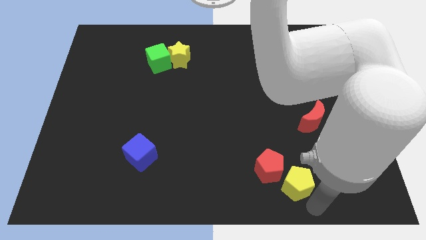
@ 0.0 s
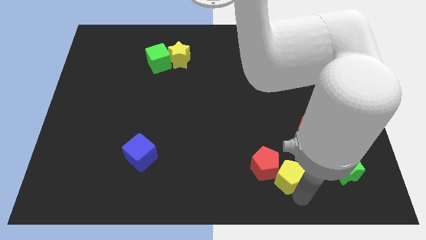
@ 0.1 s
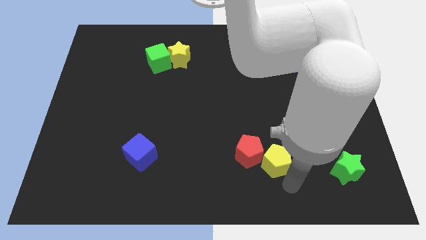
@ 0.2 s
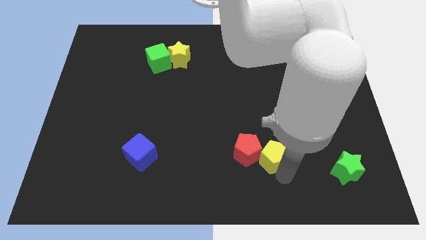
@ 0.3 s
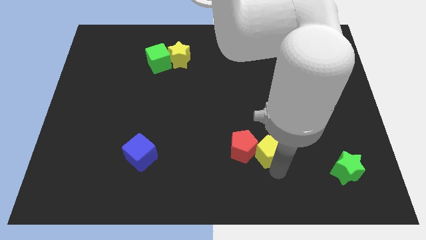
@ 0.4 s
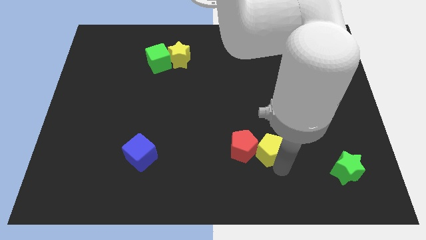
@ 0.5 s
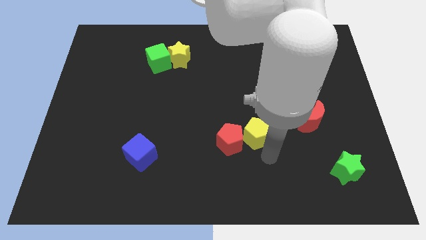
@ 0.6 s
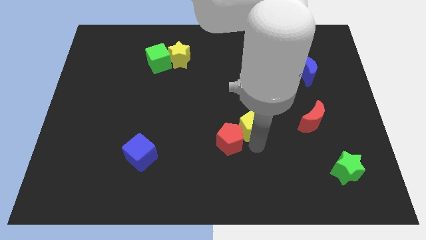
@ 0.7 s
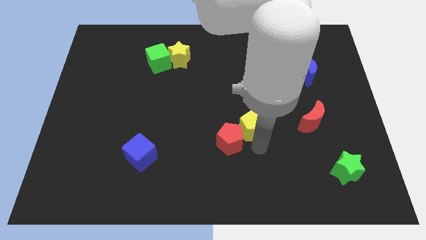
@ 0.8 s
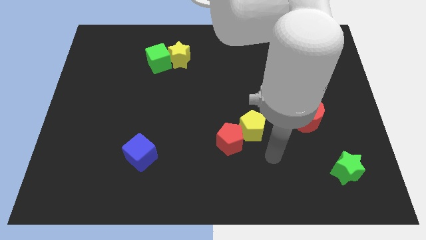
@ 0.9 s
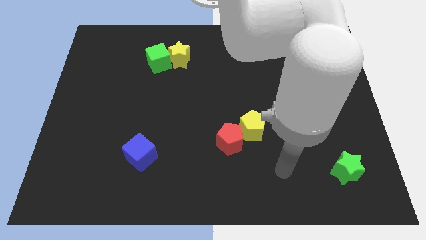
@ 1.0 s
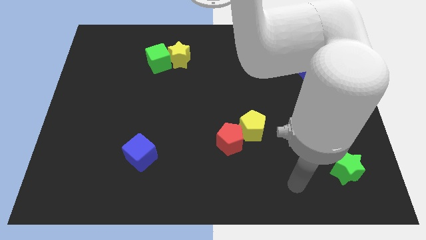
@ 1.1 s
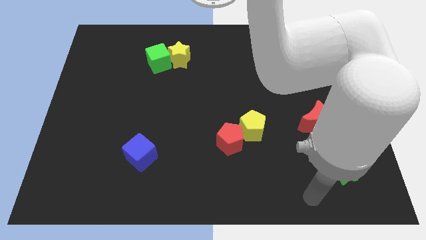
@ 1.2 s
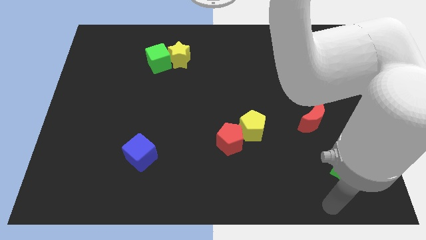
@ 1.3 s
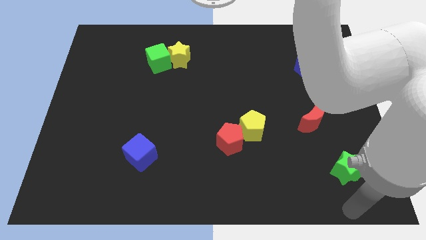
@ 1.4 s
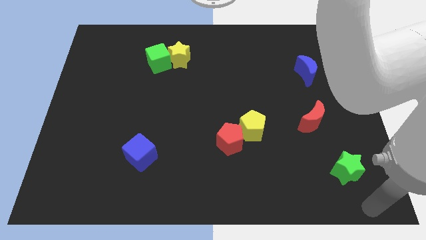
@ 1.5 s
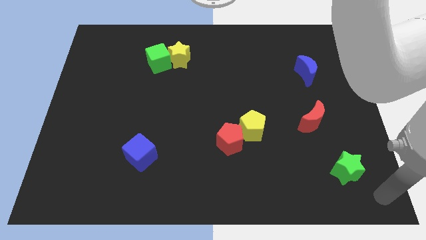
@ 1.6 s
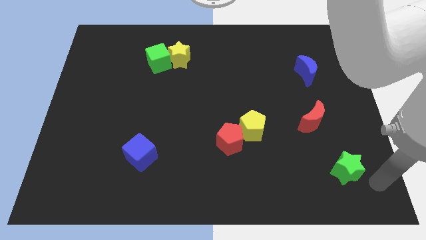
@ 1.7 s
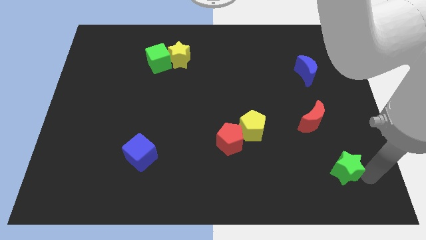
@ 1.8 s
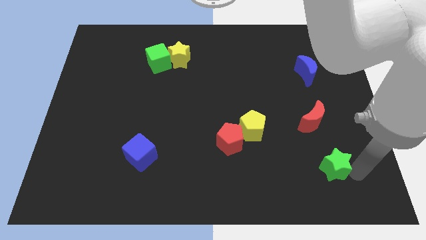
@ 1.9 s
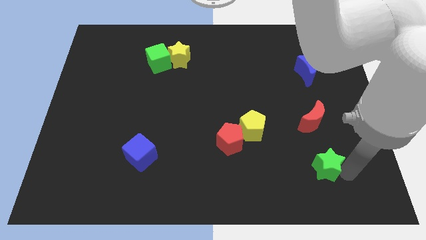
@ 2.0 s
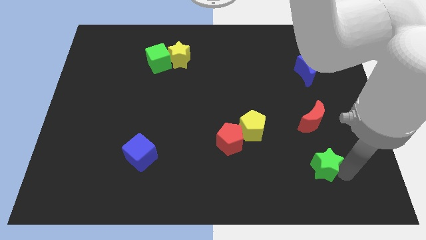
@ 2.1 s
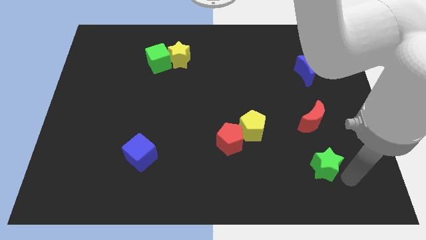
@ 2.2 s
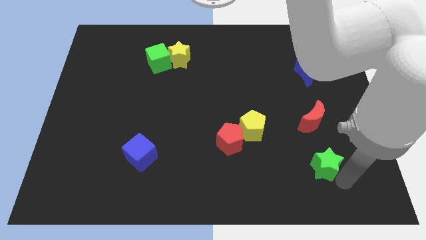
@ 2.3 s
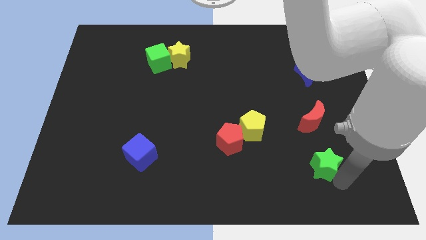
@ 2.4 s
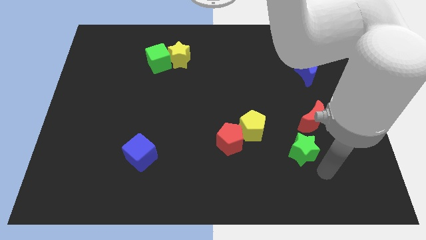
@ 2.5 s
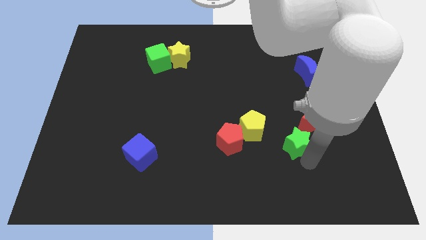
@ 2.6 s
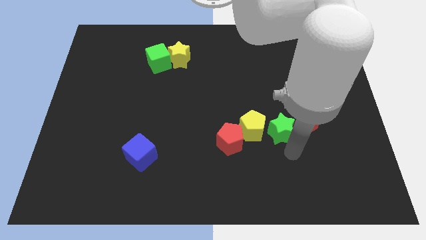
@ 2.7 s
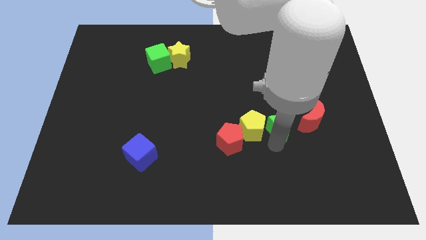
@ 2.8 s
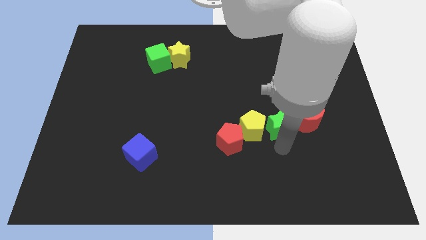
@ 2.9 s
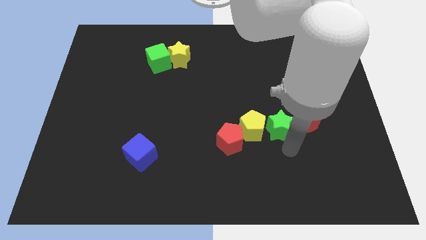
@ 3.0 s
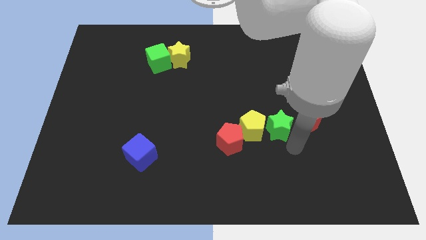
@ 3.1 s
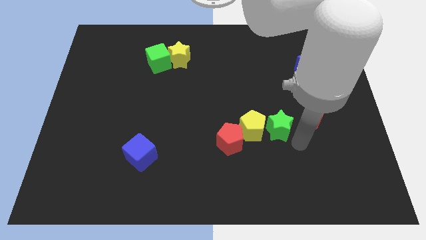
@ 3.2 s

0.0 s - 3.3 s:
move the green star to the left of the red moon

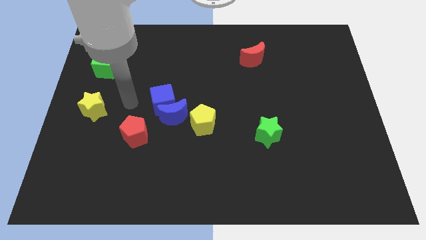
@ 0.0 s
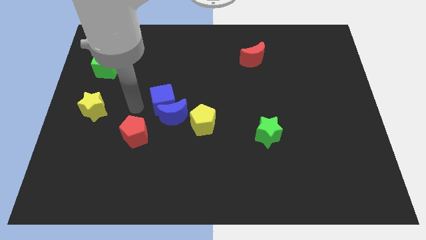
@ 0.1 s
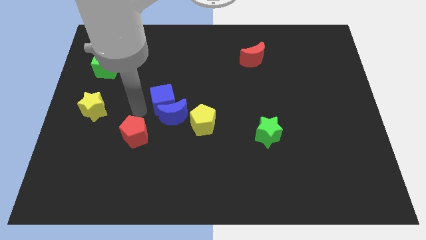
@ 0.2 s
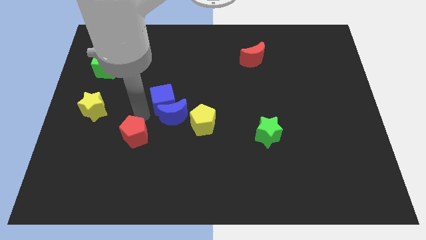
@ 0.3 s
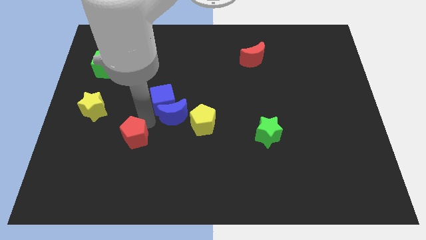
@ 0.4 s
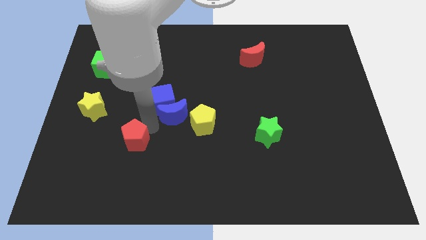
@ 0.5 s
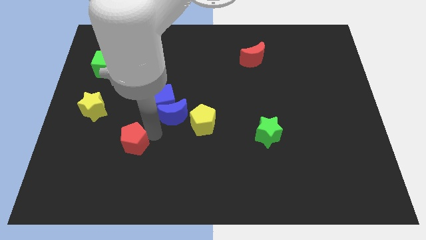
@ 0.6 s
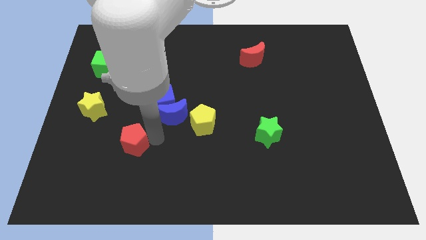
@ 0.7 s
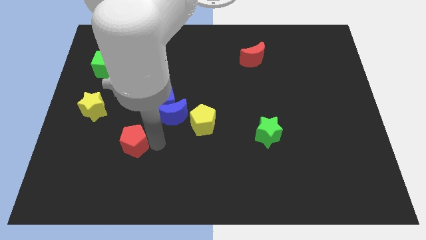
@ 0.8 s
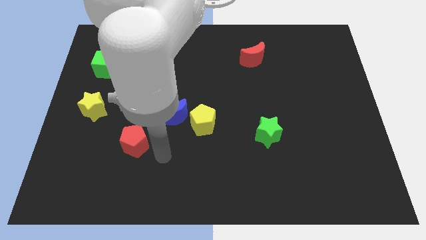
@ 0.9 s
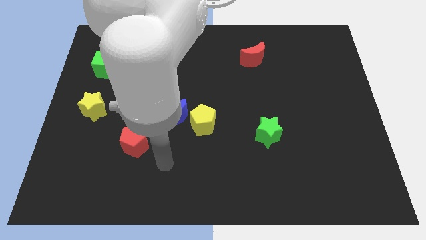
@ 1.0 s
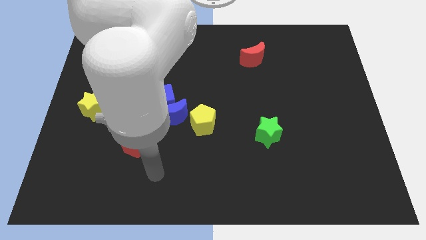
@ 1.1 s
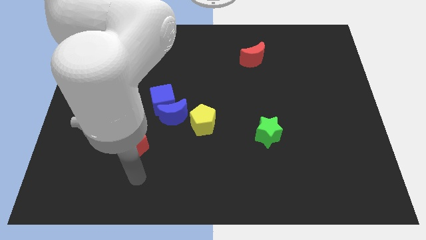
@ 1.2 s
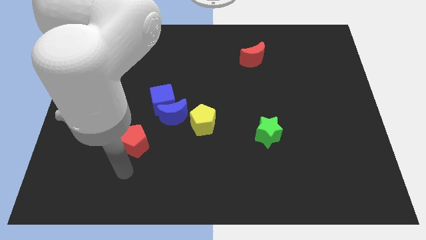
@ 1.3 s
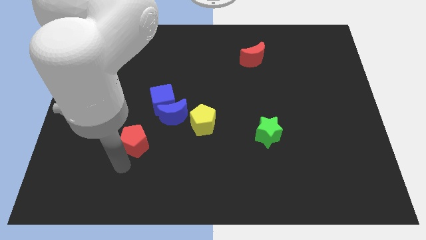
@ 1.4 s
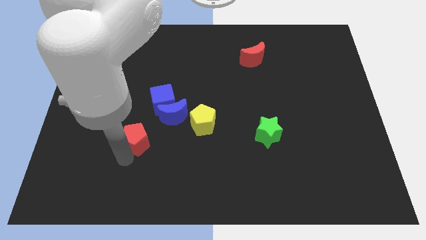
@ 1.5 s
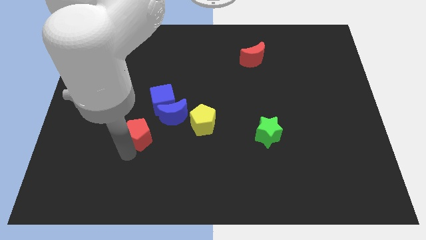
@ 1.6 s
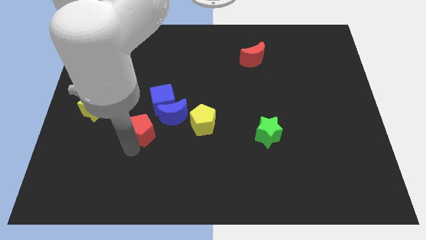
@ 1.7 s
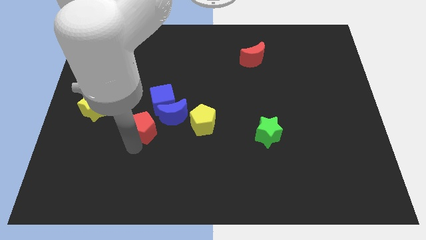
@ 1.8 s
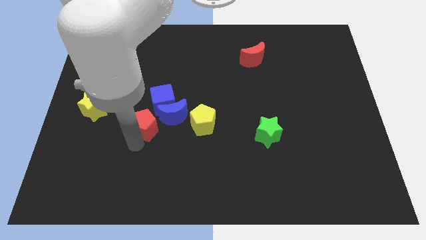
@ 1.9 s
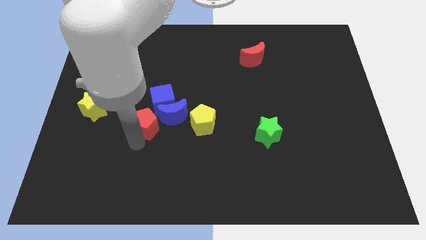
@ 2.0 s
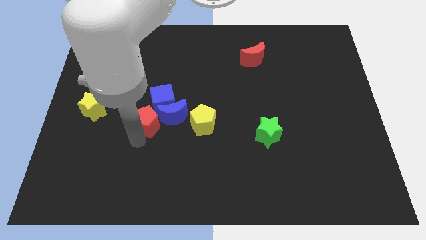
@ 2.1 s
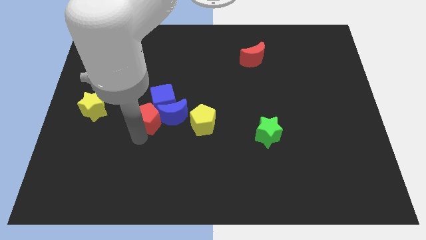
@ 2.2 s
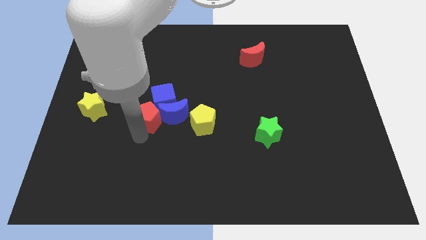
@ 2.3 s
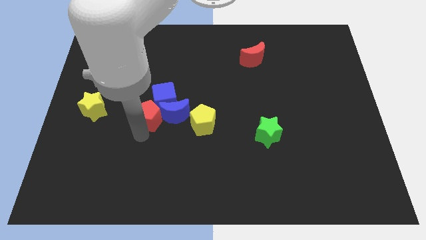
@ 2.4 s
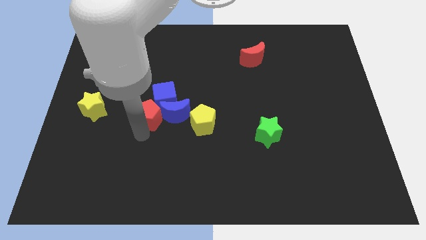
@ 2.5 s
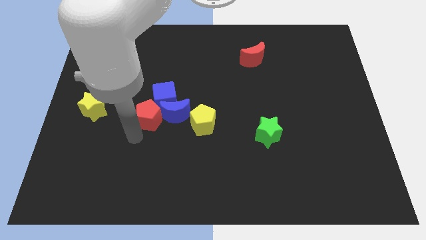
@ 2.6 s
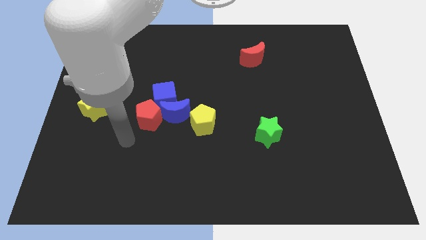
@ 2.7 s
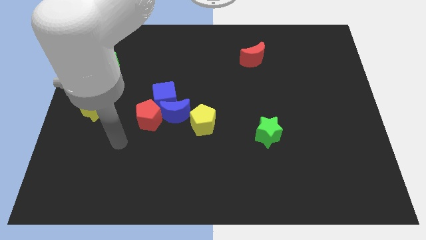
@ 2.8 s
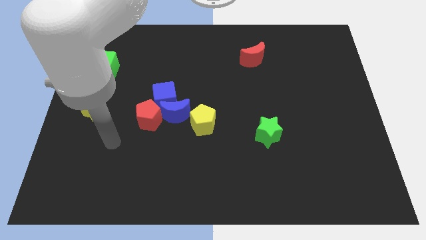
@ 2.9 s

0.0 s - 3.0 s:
move the red pentagon into the blue blocks

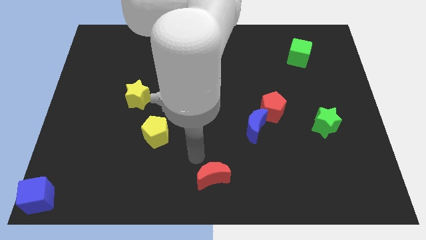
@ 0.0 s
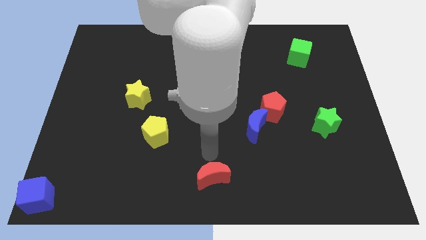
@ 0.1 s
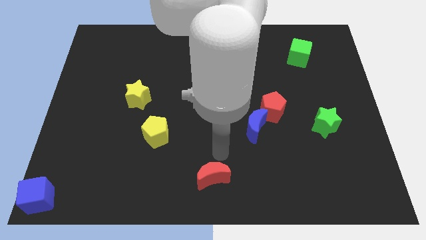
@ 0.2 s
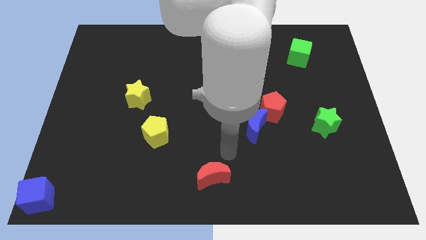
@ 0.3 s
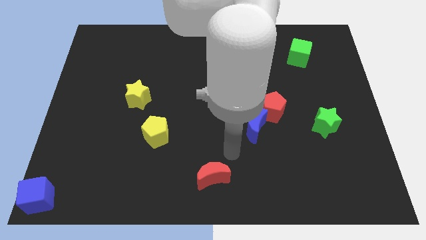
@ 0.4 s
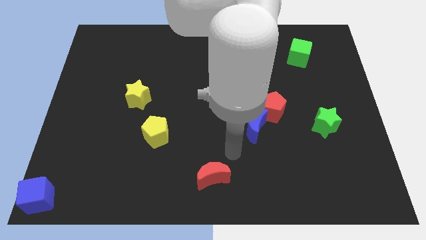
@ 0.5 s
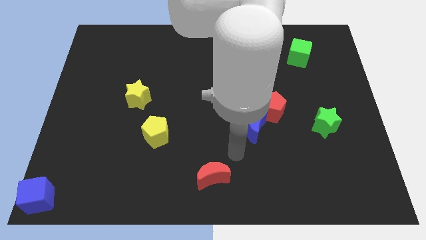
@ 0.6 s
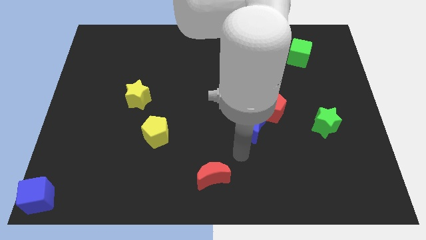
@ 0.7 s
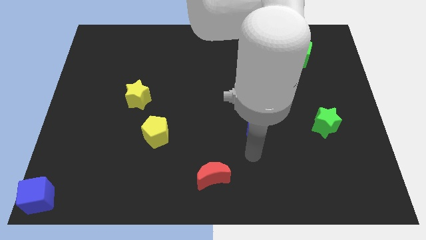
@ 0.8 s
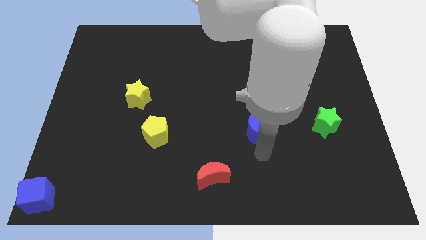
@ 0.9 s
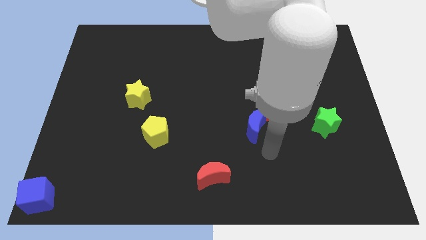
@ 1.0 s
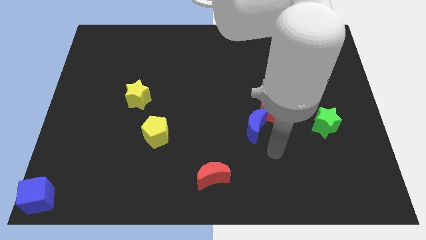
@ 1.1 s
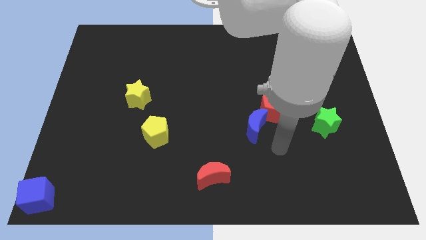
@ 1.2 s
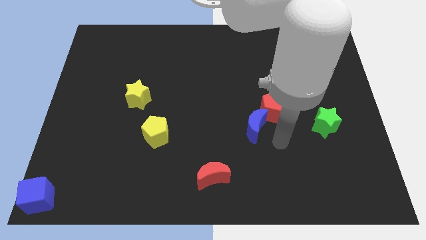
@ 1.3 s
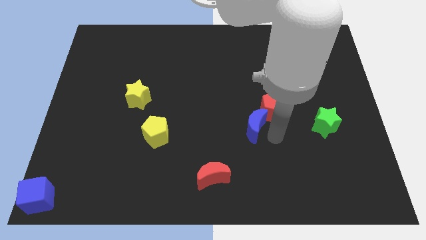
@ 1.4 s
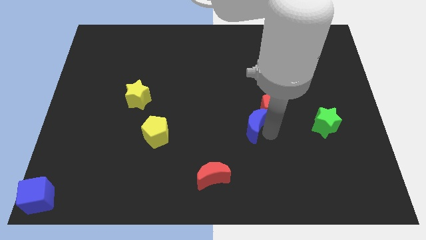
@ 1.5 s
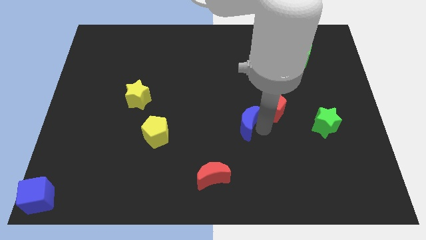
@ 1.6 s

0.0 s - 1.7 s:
touch the right of the blue moon

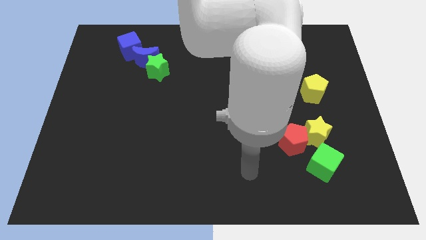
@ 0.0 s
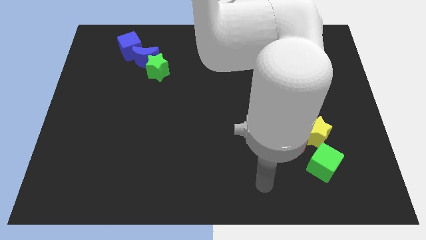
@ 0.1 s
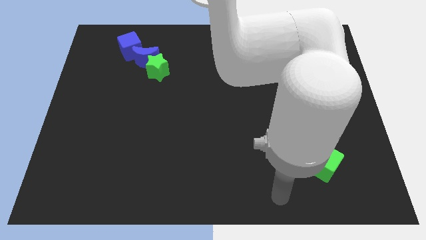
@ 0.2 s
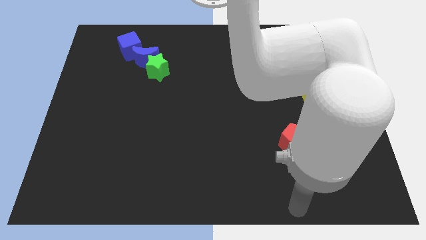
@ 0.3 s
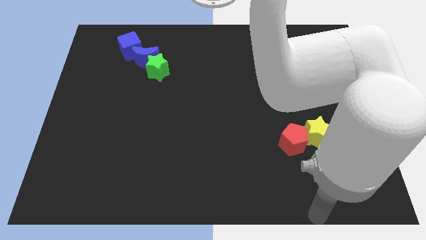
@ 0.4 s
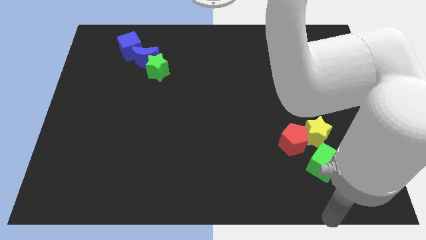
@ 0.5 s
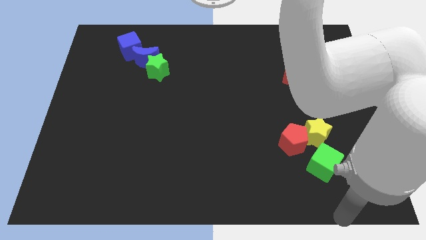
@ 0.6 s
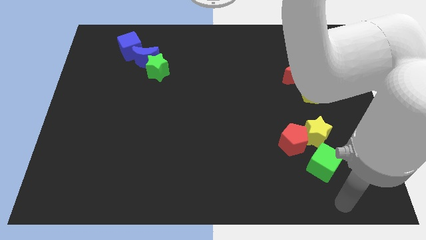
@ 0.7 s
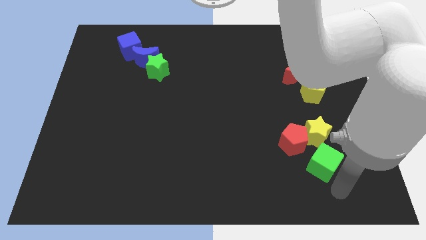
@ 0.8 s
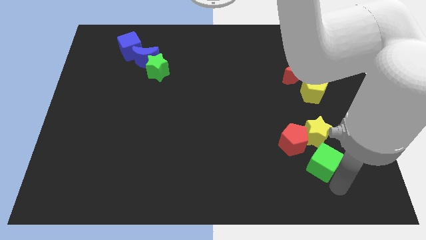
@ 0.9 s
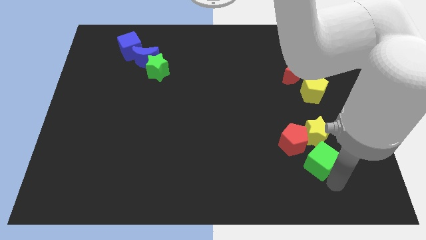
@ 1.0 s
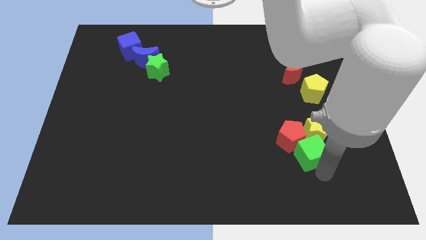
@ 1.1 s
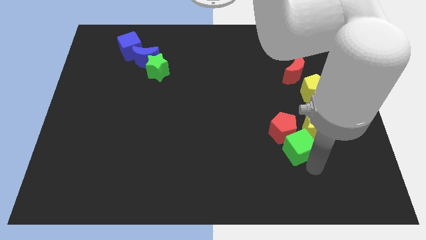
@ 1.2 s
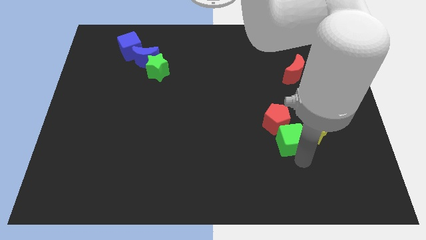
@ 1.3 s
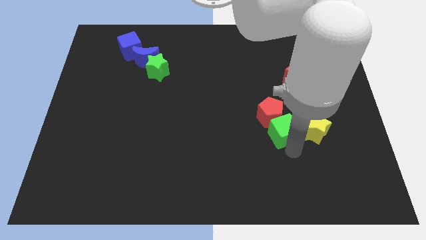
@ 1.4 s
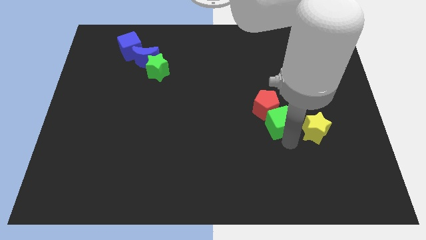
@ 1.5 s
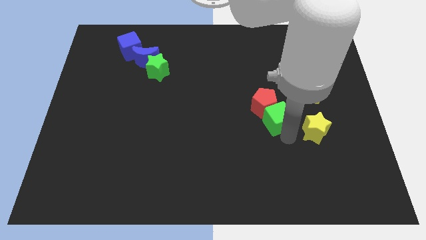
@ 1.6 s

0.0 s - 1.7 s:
push green cube into the red pentagon
